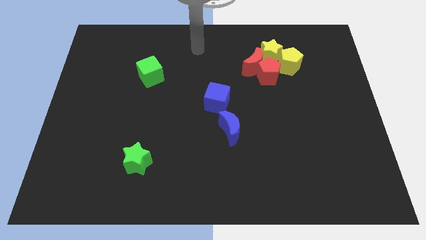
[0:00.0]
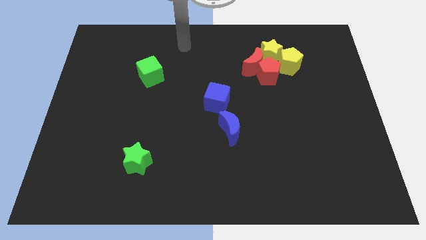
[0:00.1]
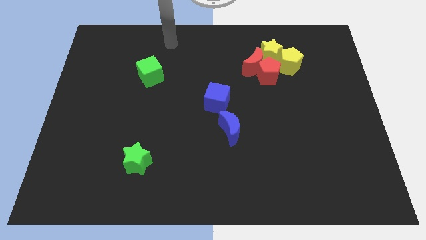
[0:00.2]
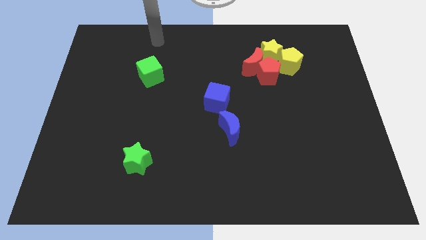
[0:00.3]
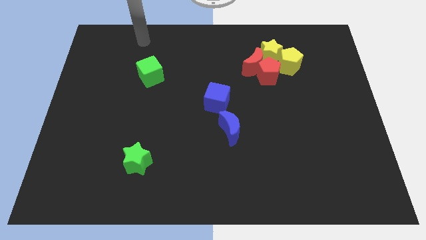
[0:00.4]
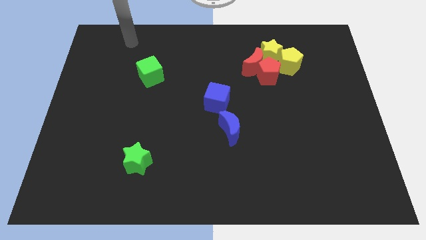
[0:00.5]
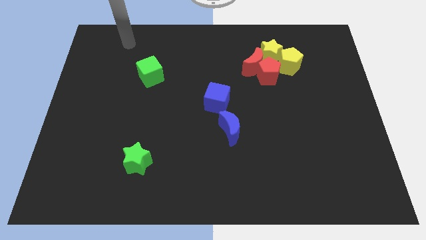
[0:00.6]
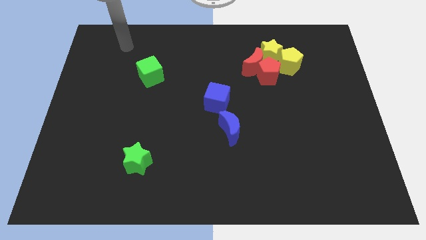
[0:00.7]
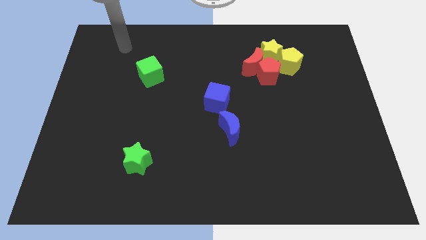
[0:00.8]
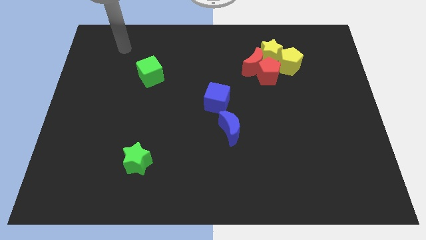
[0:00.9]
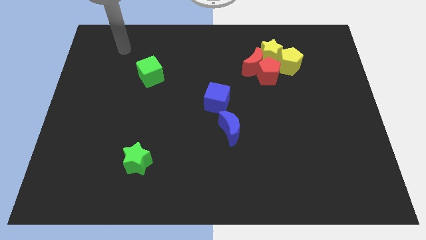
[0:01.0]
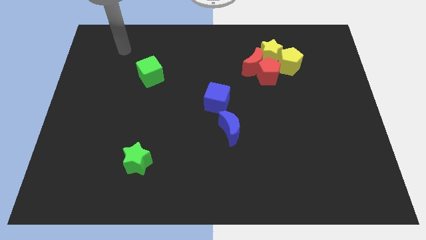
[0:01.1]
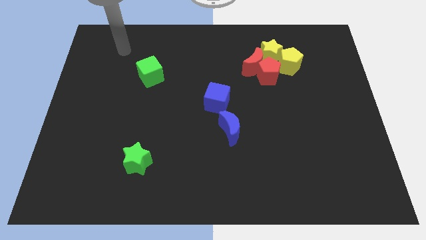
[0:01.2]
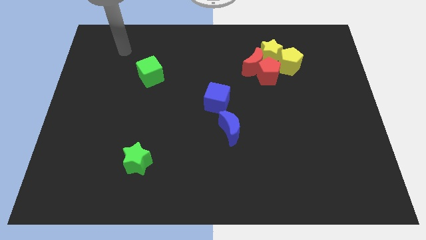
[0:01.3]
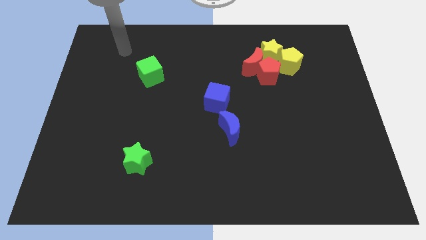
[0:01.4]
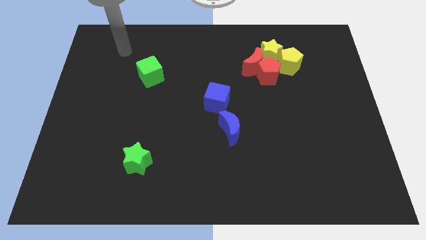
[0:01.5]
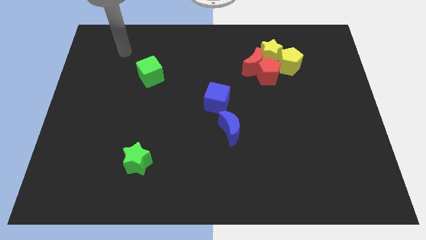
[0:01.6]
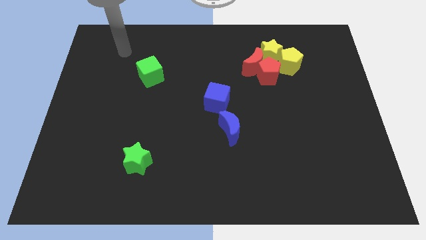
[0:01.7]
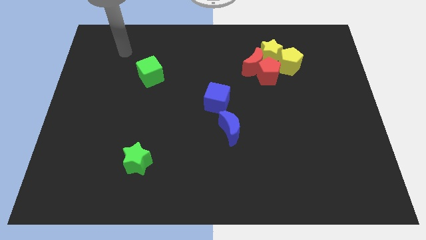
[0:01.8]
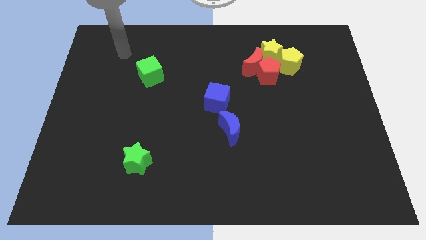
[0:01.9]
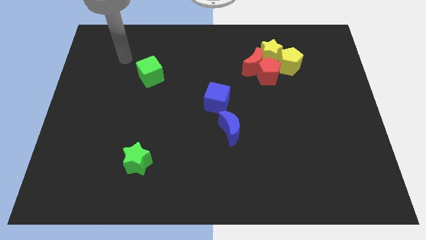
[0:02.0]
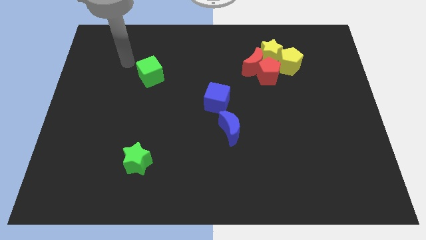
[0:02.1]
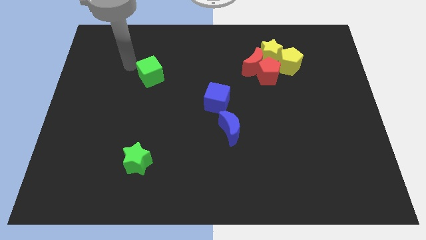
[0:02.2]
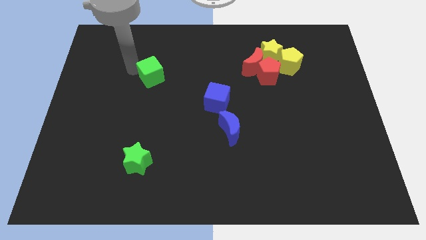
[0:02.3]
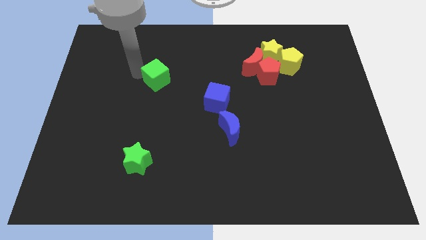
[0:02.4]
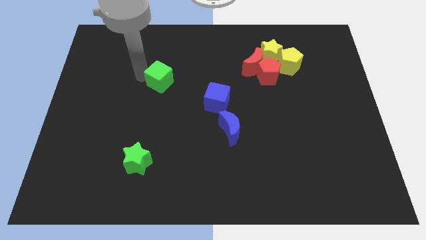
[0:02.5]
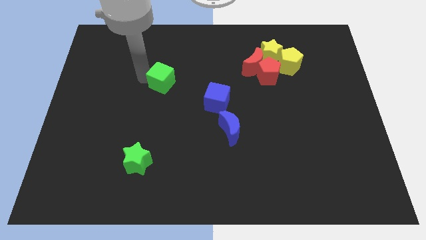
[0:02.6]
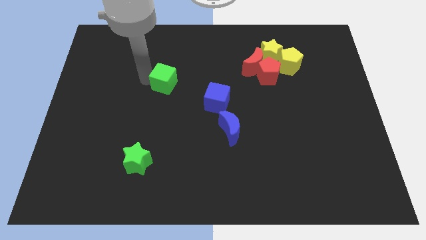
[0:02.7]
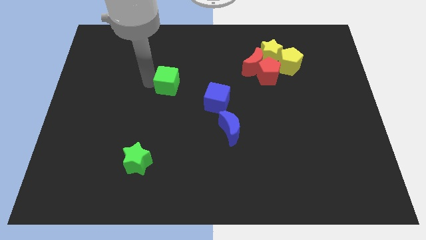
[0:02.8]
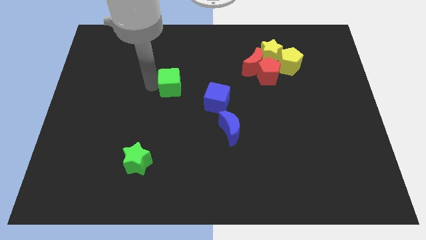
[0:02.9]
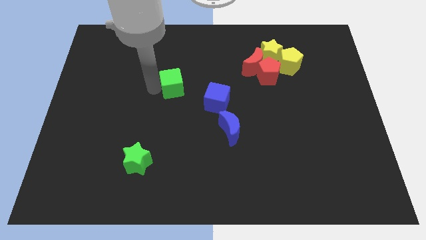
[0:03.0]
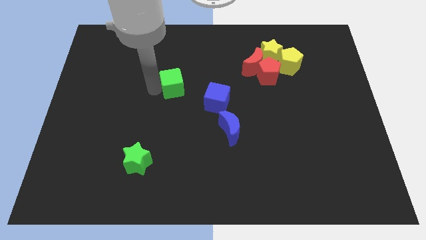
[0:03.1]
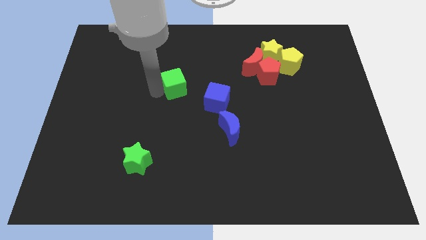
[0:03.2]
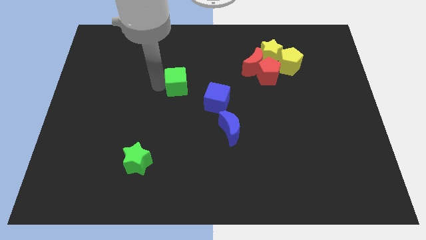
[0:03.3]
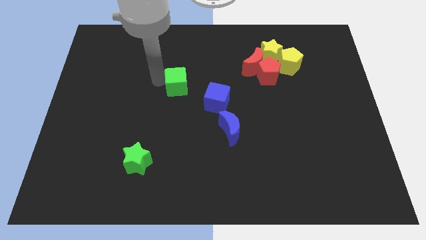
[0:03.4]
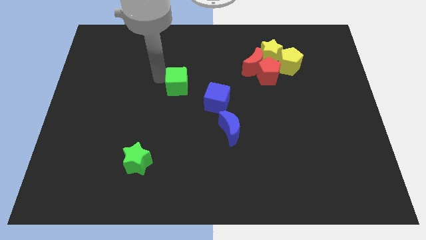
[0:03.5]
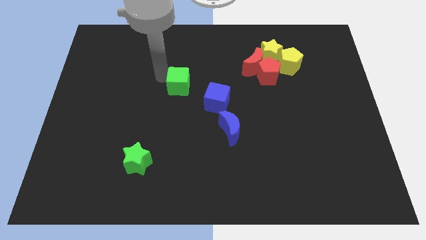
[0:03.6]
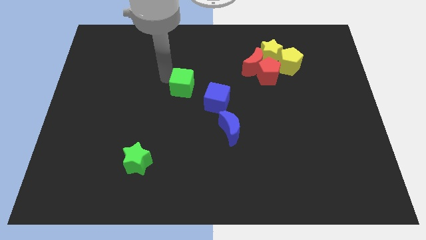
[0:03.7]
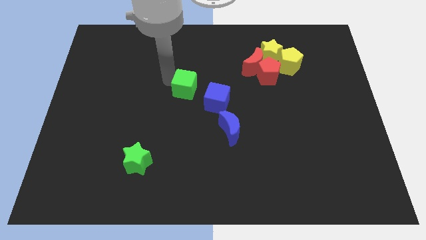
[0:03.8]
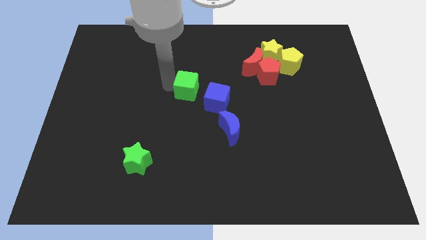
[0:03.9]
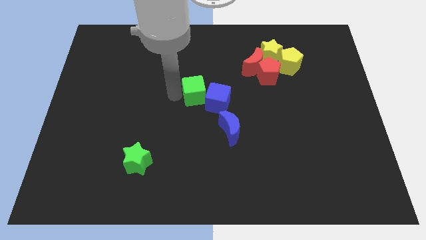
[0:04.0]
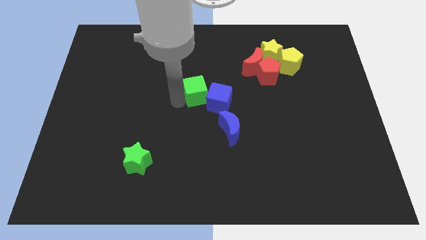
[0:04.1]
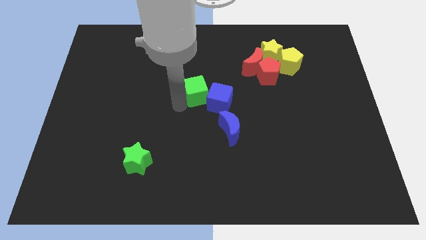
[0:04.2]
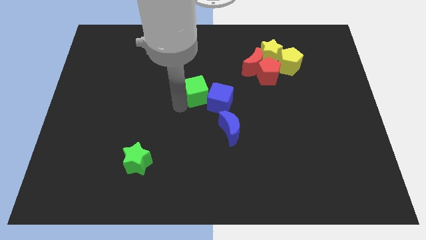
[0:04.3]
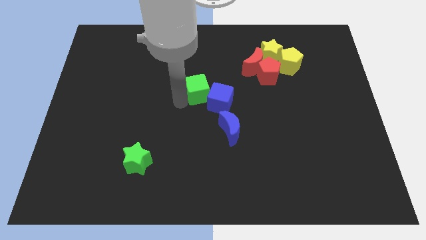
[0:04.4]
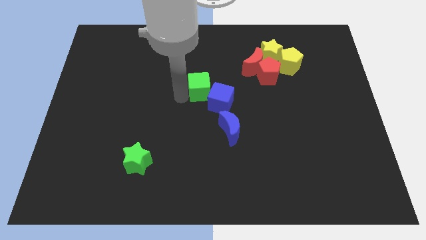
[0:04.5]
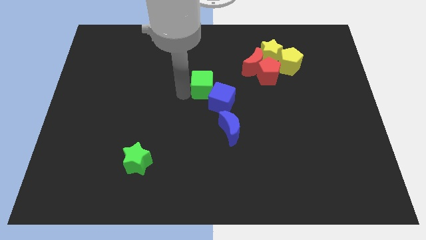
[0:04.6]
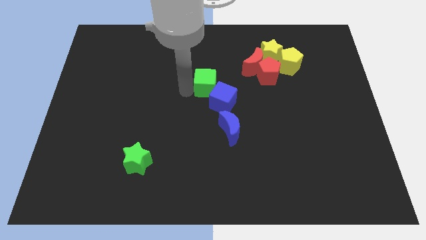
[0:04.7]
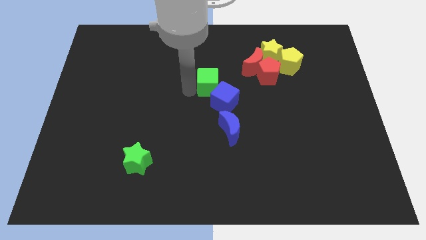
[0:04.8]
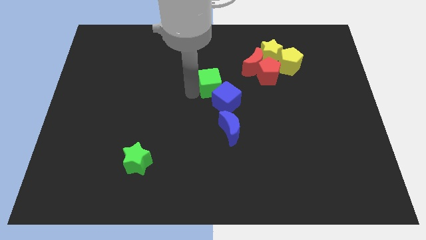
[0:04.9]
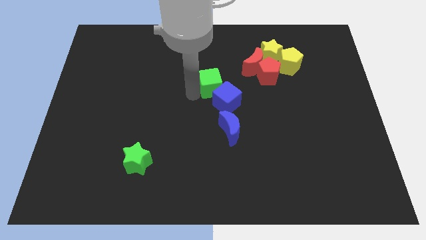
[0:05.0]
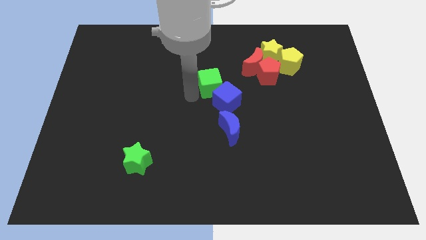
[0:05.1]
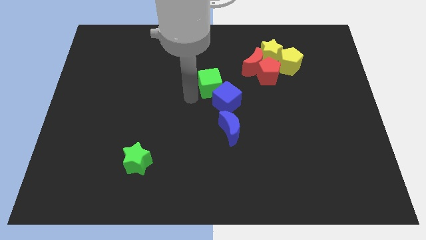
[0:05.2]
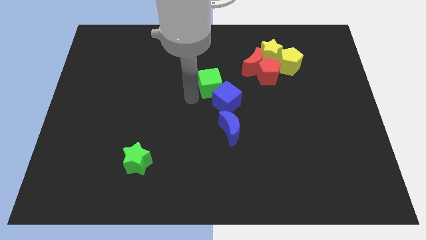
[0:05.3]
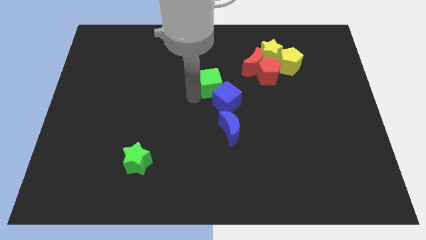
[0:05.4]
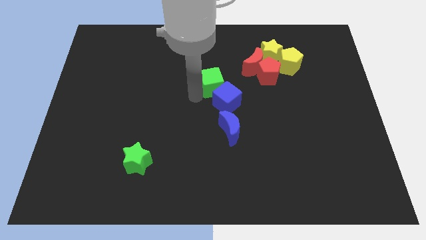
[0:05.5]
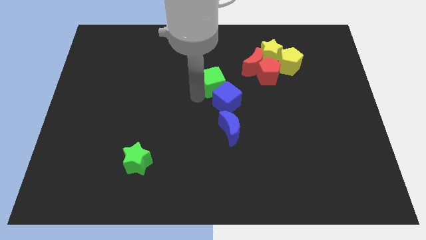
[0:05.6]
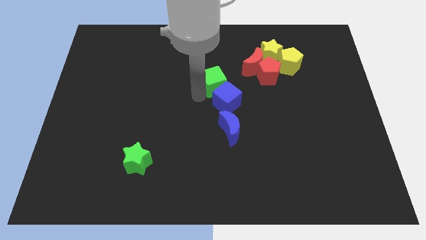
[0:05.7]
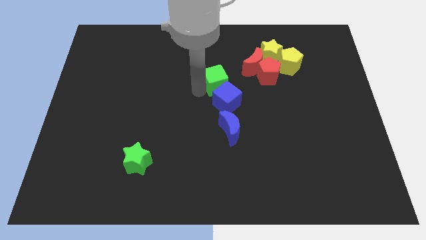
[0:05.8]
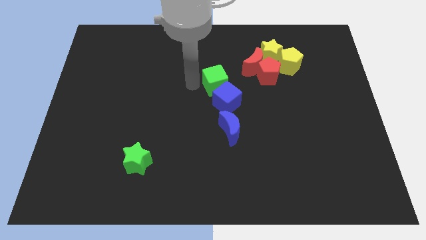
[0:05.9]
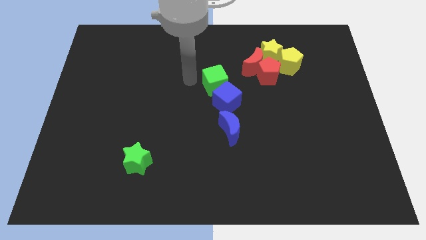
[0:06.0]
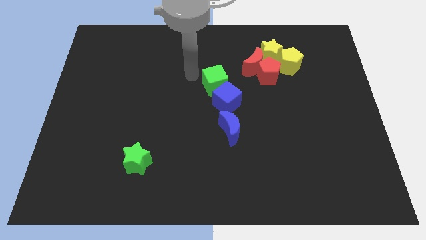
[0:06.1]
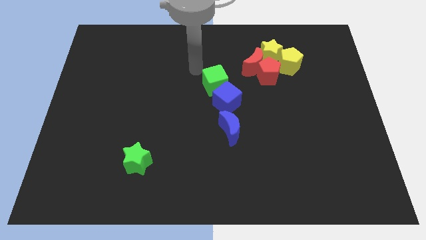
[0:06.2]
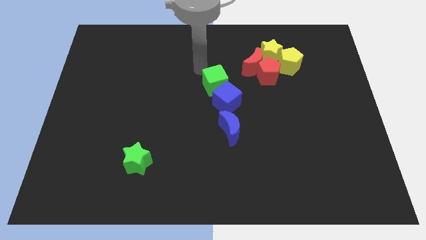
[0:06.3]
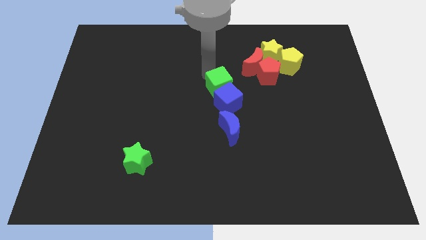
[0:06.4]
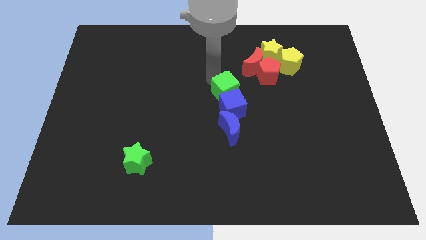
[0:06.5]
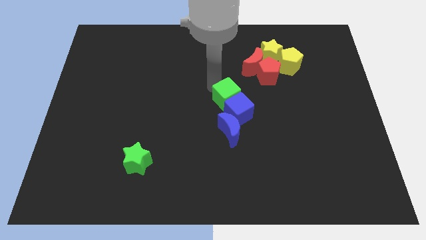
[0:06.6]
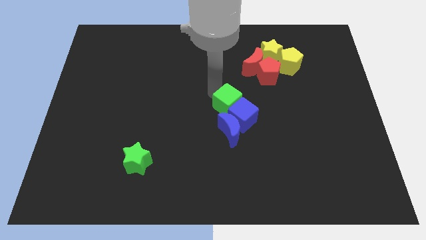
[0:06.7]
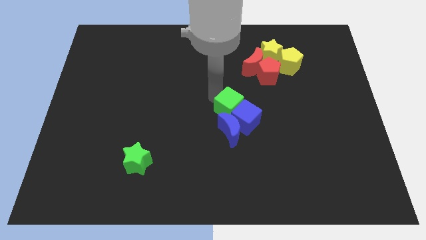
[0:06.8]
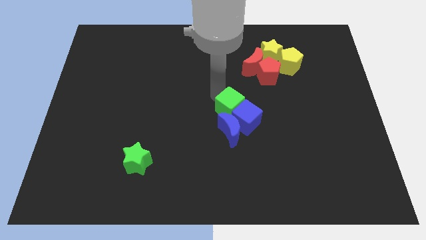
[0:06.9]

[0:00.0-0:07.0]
push the green cube into the blue cube

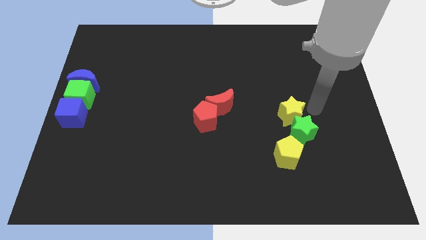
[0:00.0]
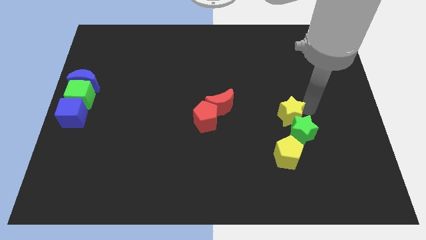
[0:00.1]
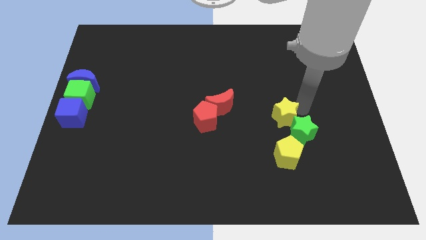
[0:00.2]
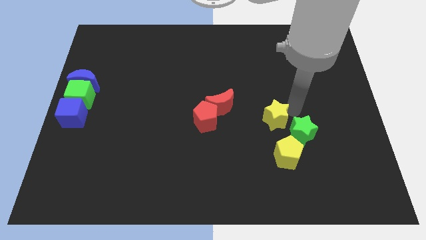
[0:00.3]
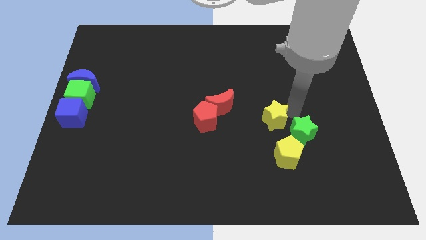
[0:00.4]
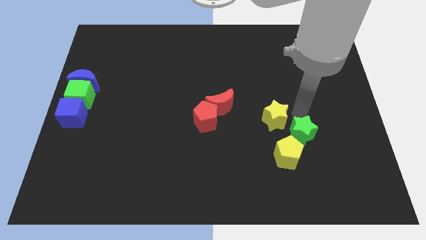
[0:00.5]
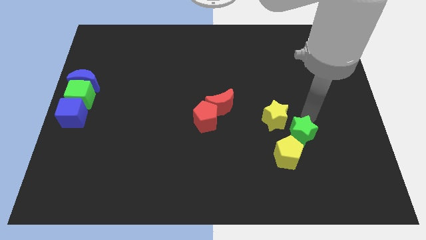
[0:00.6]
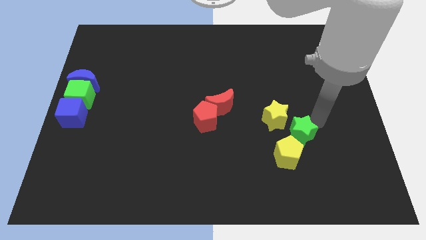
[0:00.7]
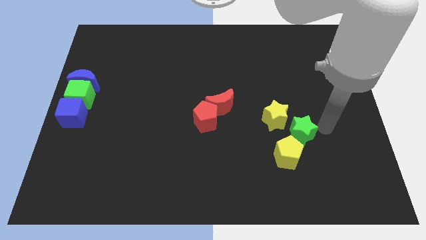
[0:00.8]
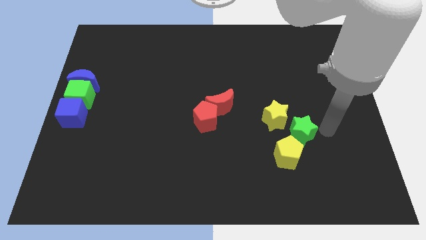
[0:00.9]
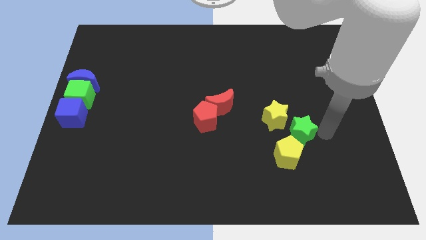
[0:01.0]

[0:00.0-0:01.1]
place the yellow star in between the green star and red moon

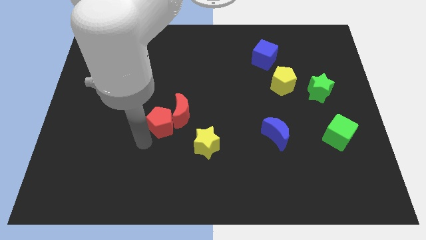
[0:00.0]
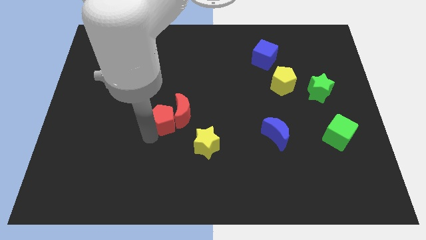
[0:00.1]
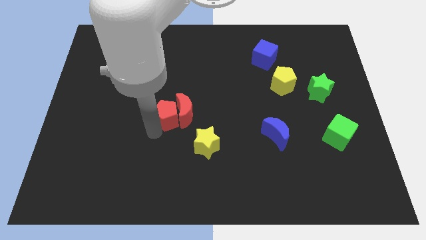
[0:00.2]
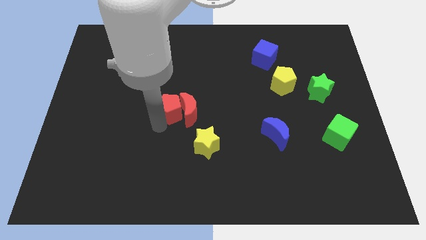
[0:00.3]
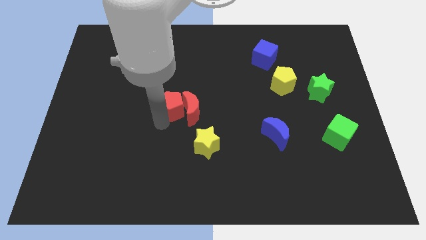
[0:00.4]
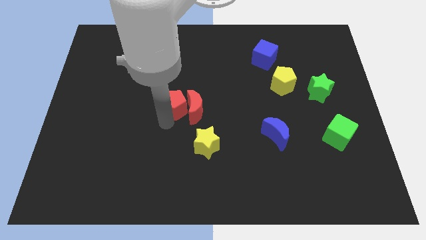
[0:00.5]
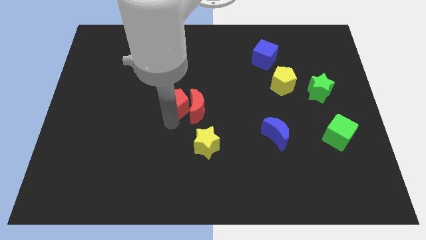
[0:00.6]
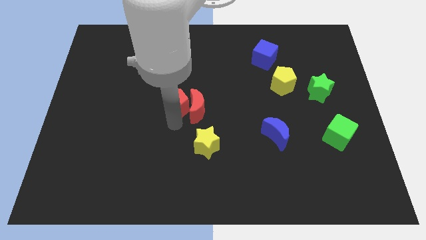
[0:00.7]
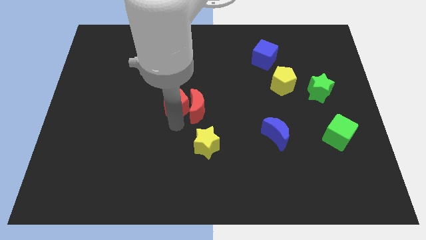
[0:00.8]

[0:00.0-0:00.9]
push the red pentagon inton red moon
